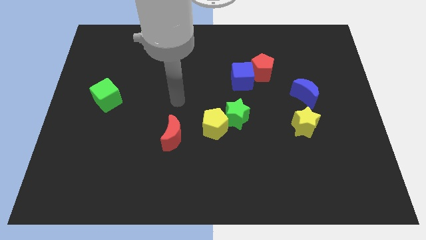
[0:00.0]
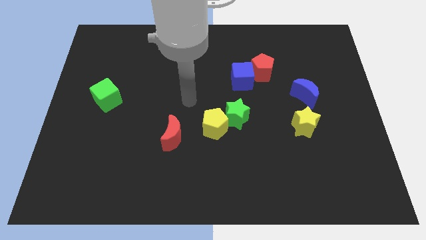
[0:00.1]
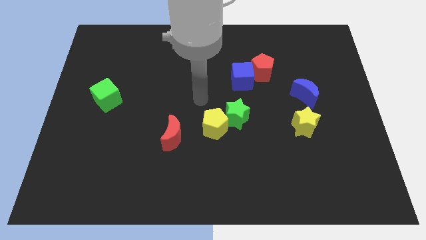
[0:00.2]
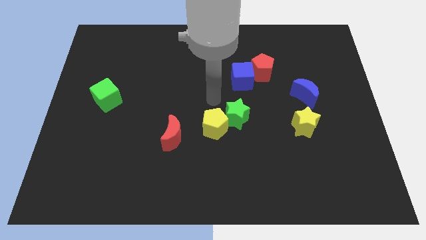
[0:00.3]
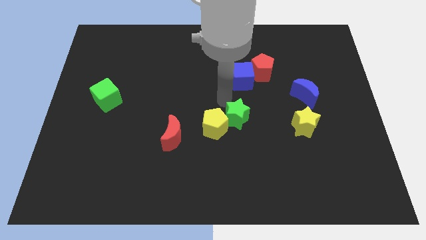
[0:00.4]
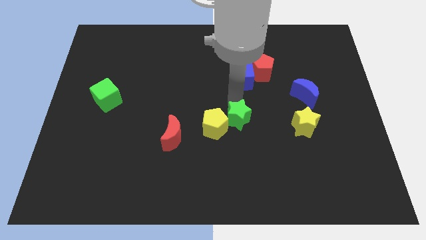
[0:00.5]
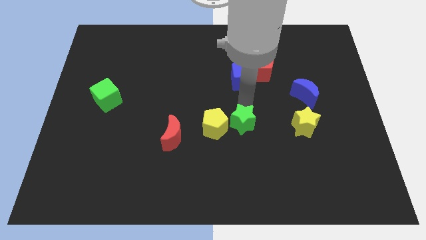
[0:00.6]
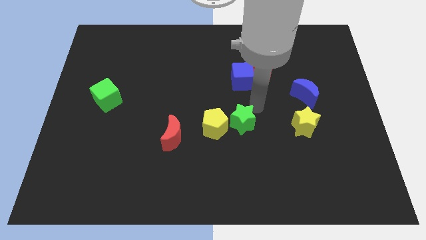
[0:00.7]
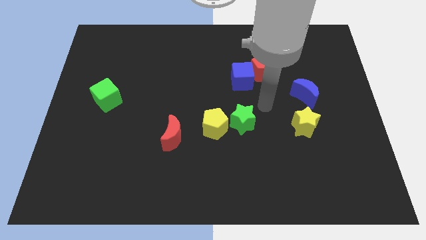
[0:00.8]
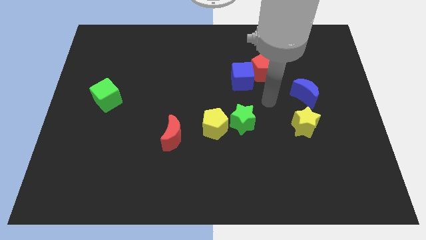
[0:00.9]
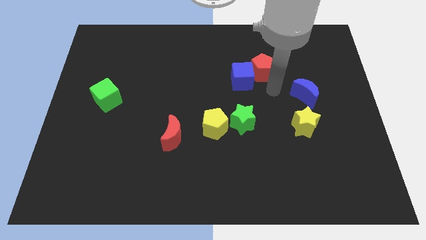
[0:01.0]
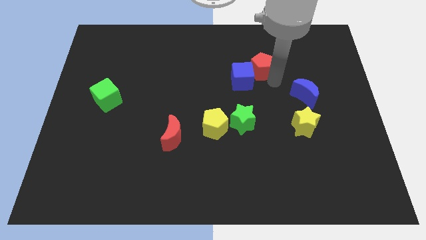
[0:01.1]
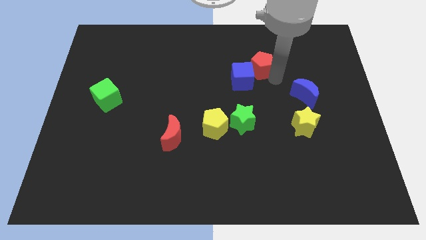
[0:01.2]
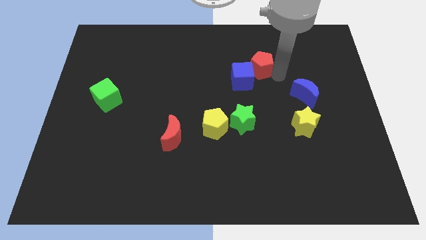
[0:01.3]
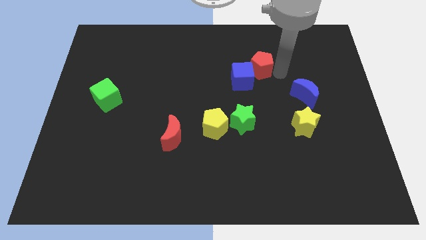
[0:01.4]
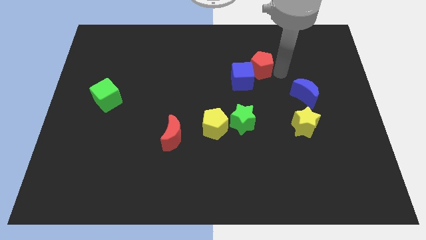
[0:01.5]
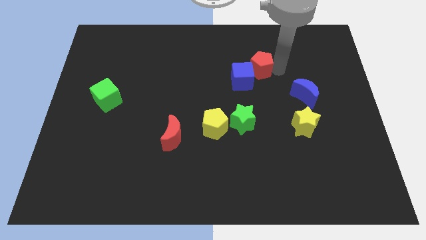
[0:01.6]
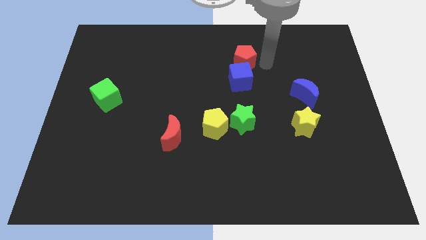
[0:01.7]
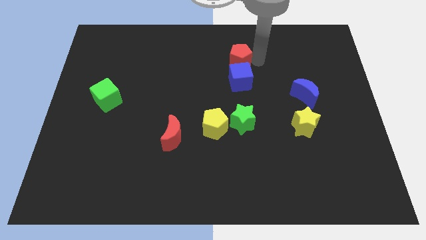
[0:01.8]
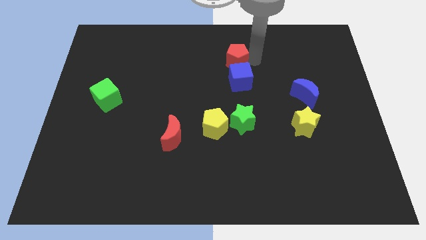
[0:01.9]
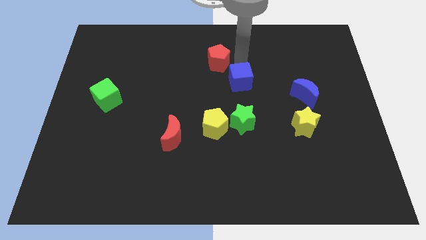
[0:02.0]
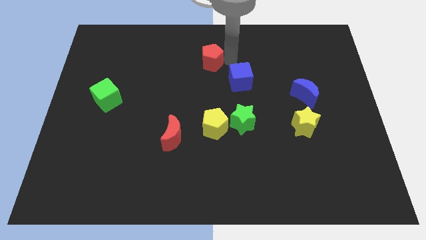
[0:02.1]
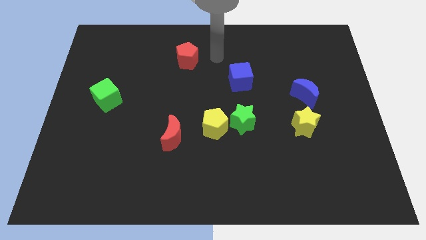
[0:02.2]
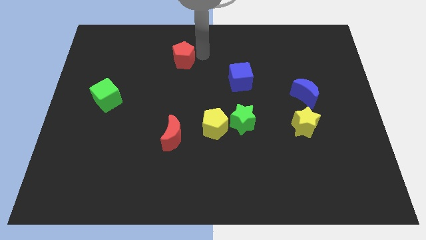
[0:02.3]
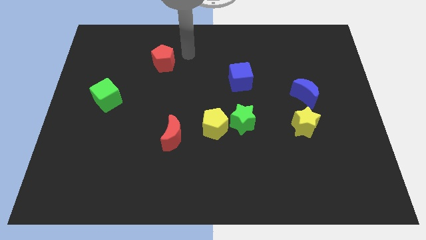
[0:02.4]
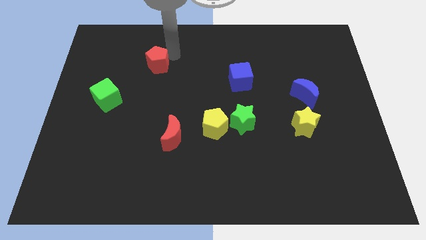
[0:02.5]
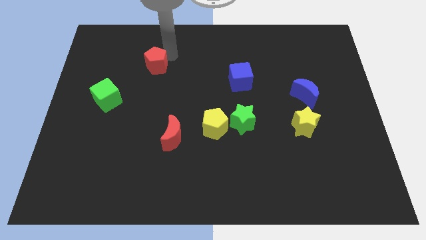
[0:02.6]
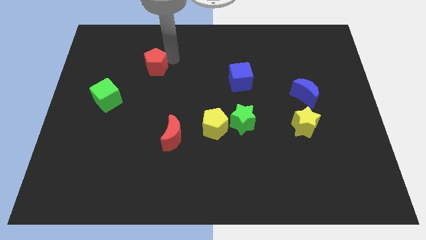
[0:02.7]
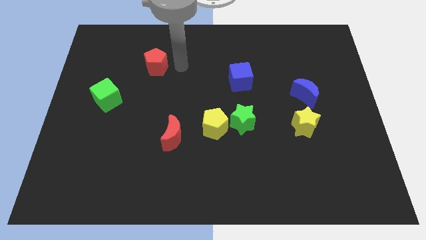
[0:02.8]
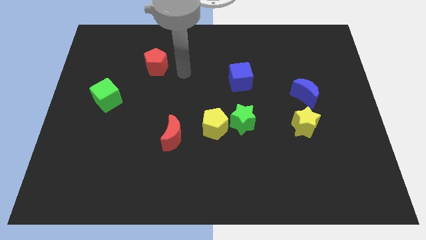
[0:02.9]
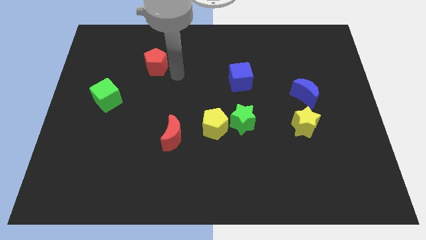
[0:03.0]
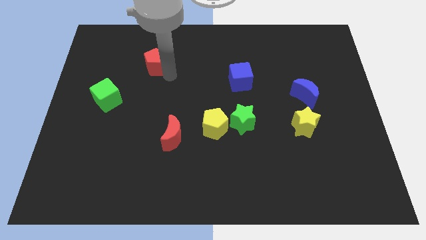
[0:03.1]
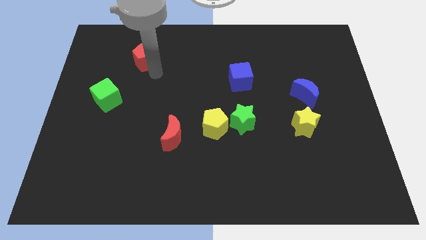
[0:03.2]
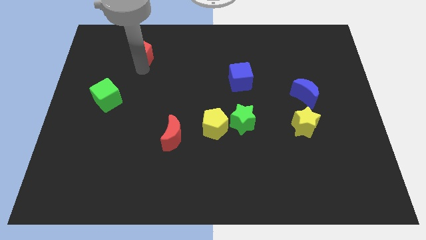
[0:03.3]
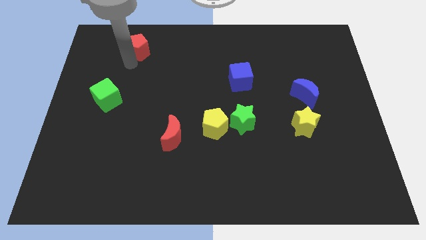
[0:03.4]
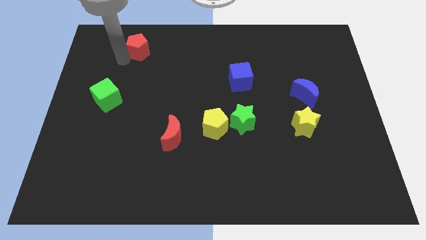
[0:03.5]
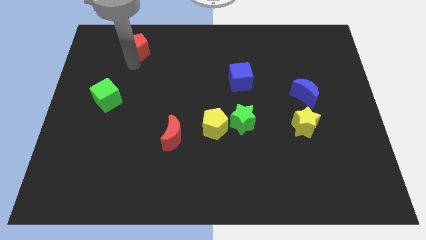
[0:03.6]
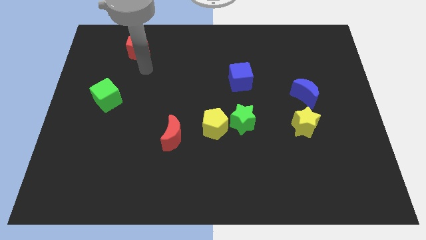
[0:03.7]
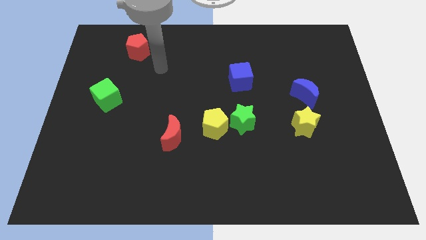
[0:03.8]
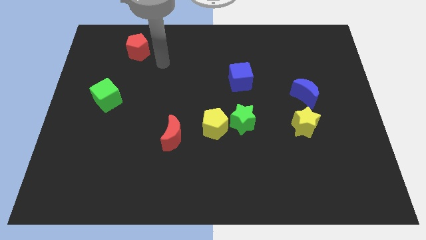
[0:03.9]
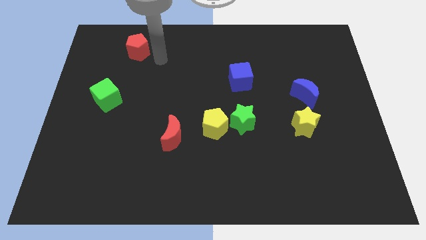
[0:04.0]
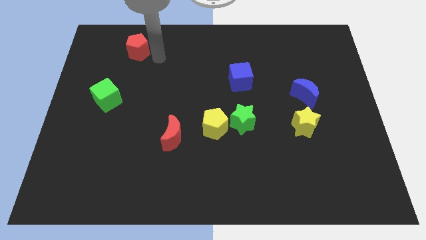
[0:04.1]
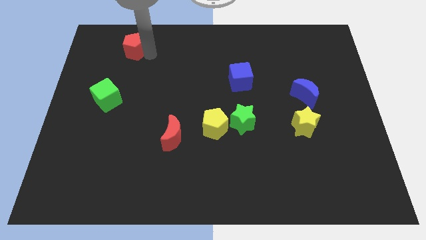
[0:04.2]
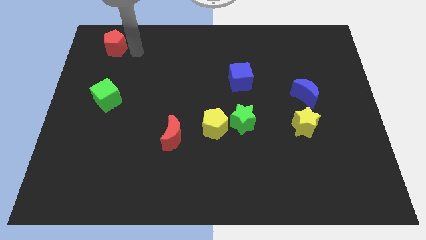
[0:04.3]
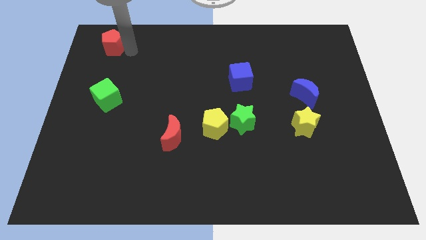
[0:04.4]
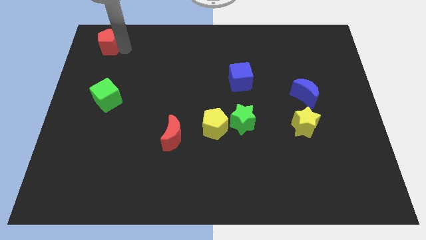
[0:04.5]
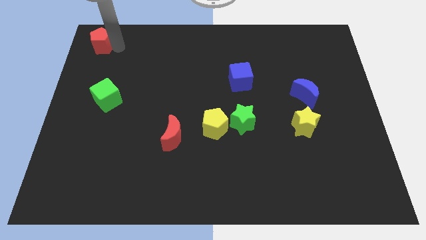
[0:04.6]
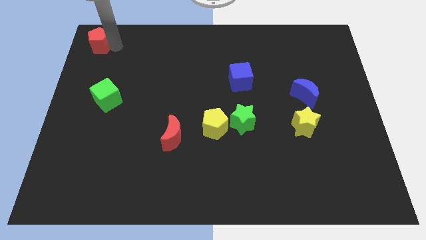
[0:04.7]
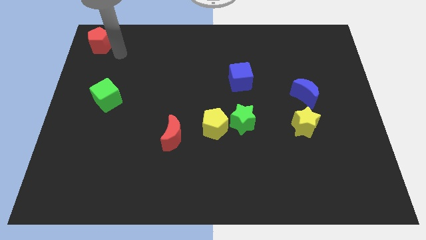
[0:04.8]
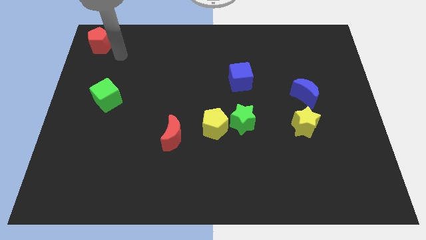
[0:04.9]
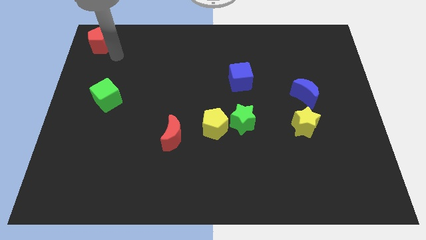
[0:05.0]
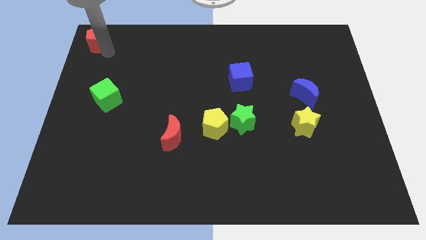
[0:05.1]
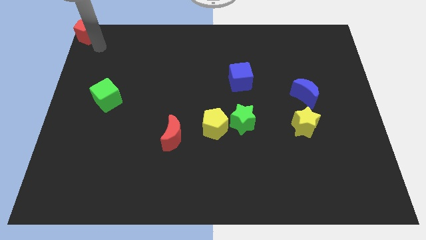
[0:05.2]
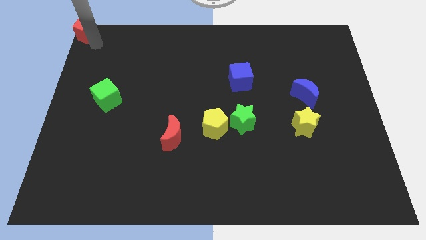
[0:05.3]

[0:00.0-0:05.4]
move the red pentagon towards the top left corner

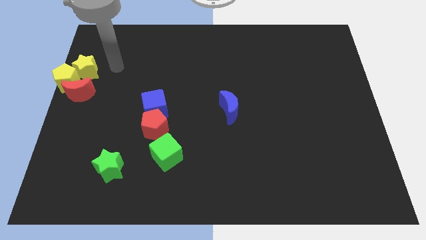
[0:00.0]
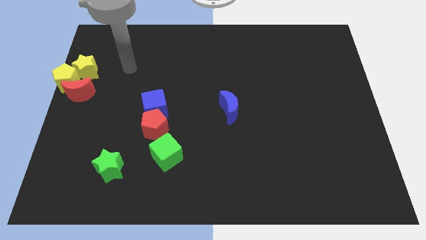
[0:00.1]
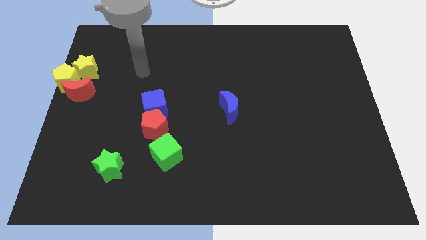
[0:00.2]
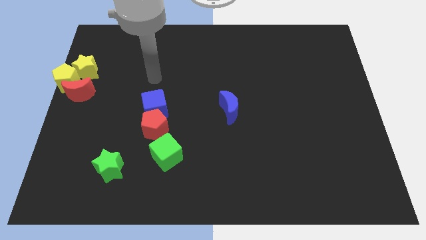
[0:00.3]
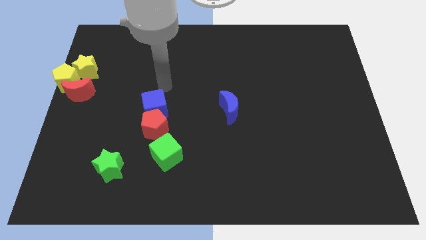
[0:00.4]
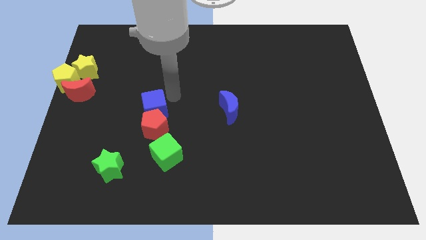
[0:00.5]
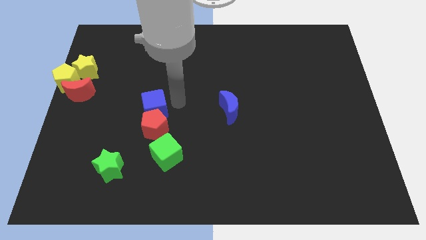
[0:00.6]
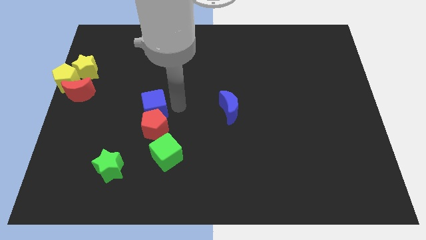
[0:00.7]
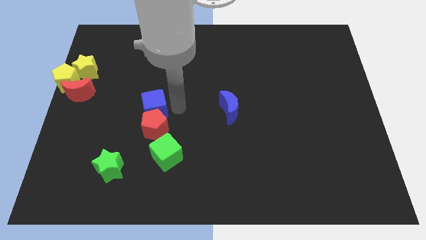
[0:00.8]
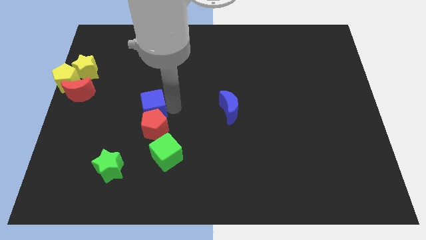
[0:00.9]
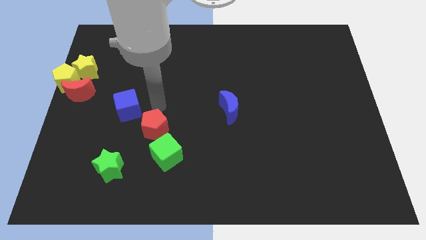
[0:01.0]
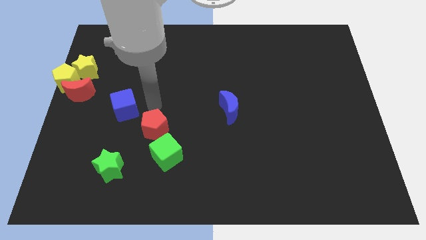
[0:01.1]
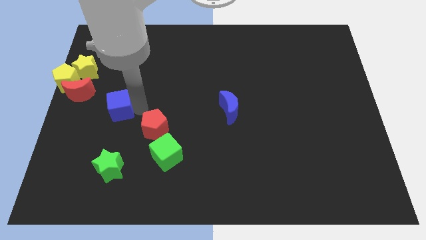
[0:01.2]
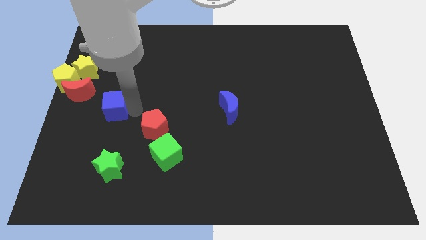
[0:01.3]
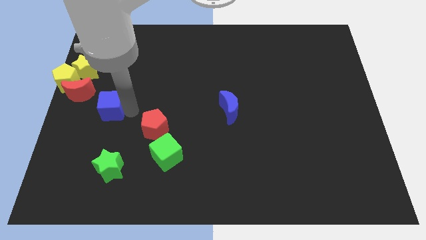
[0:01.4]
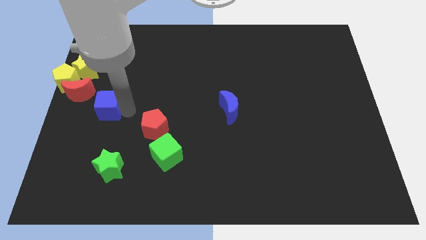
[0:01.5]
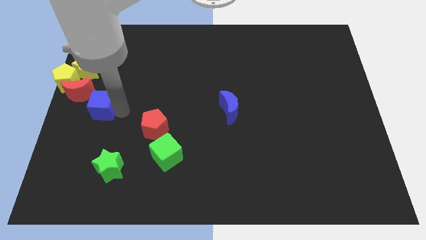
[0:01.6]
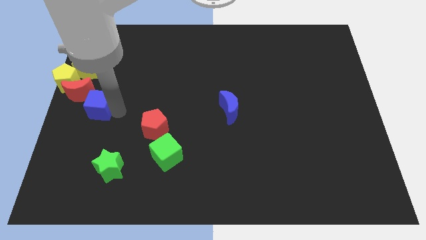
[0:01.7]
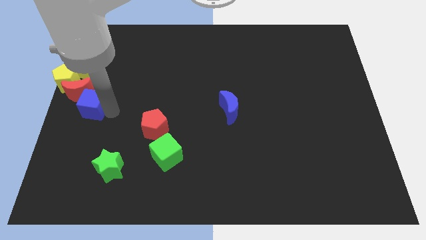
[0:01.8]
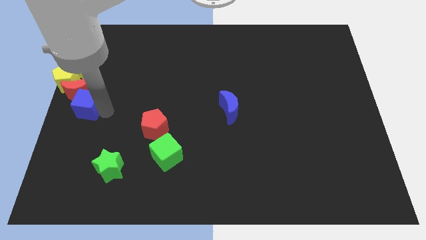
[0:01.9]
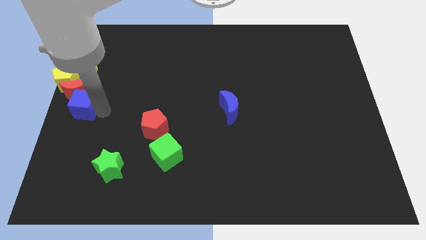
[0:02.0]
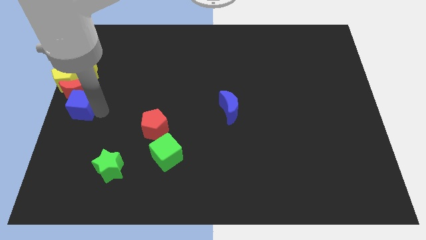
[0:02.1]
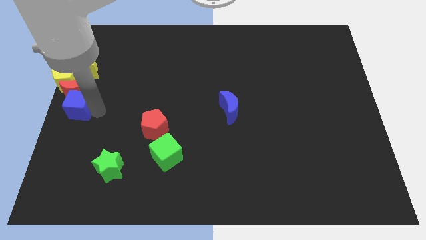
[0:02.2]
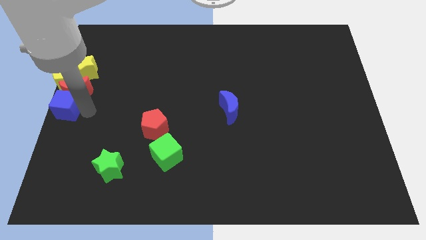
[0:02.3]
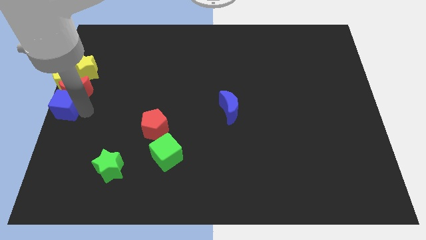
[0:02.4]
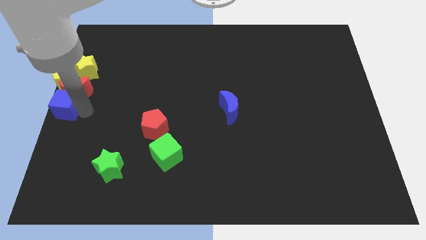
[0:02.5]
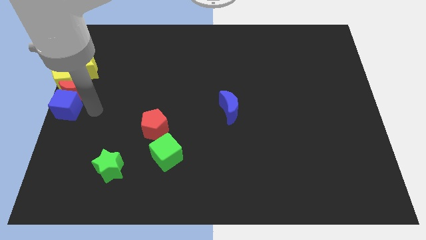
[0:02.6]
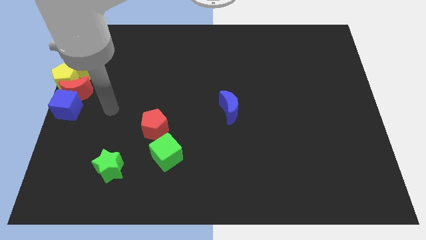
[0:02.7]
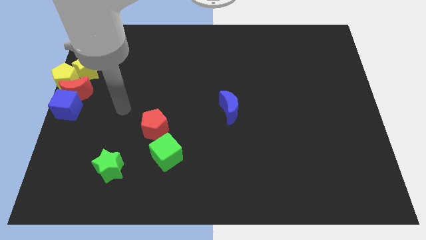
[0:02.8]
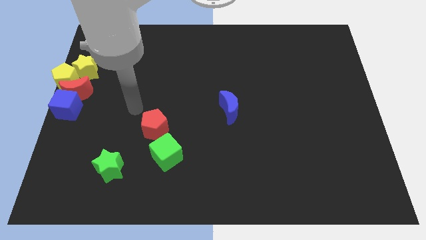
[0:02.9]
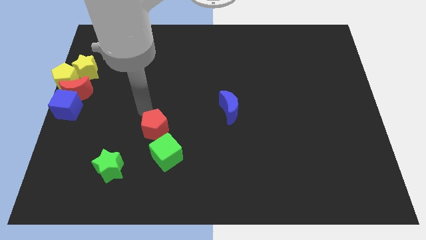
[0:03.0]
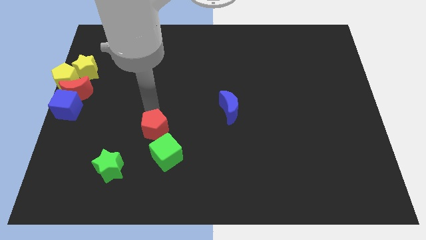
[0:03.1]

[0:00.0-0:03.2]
slide the blue cube to the bottom side of the red moon

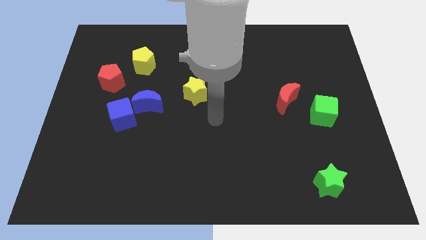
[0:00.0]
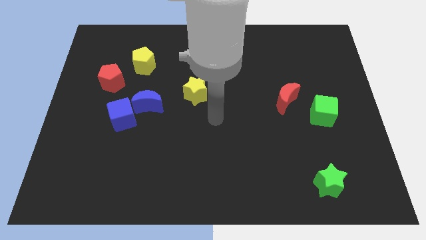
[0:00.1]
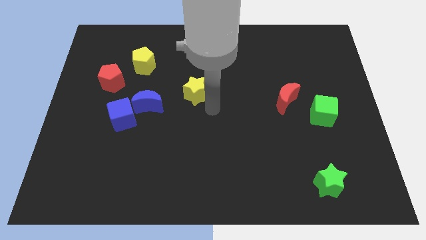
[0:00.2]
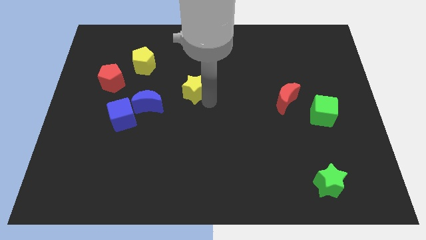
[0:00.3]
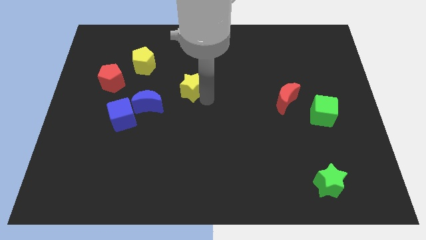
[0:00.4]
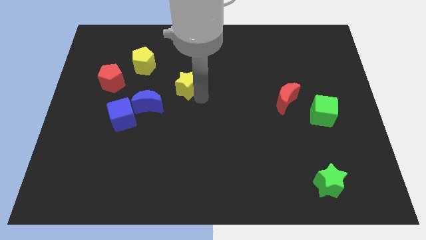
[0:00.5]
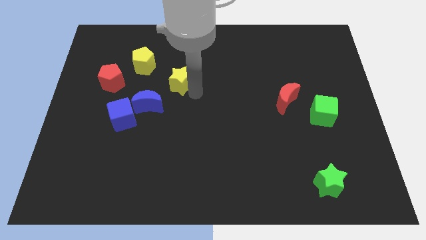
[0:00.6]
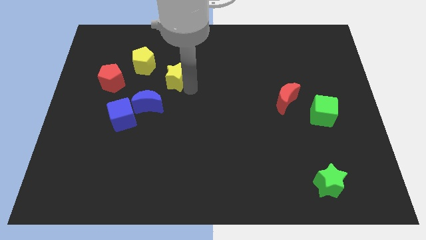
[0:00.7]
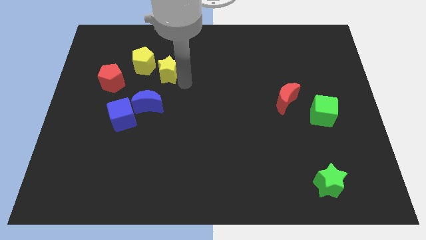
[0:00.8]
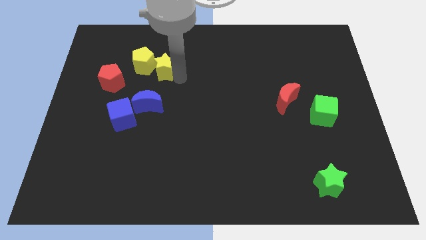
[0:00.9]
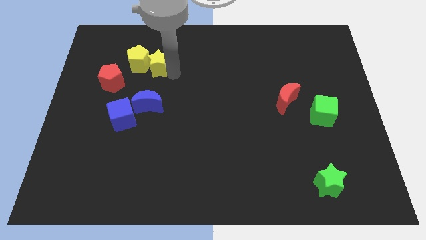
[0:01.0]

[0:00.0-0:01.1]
move yellow star into yellow pentagon
